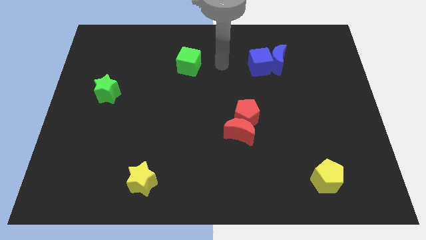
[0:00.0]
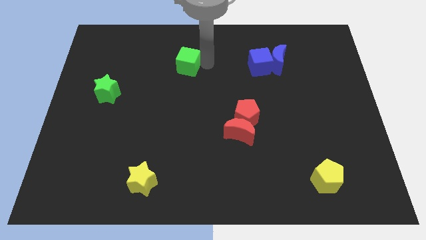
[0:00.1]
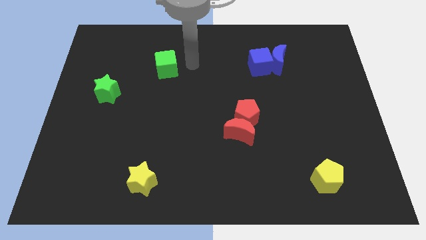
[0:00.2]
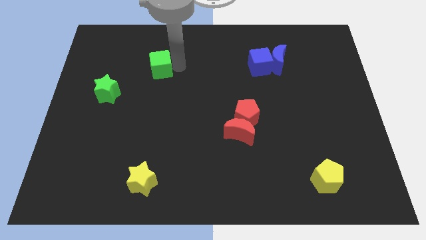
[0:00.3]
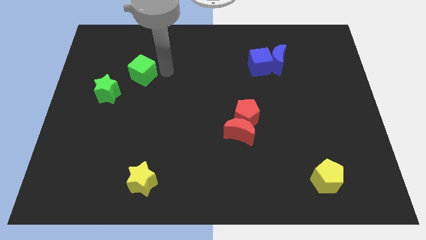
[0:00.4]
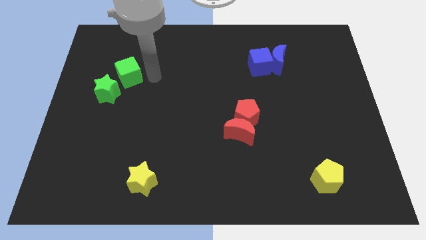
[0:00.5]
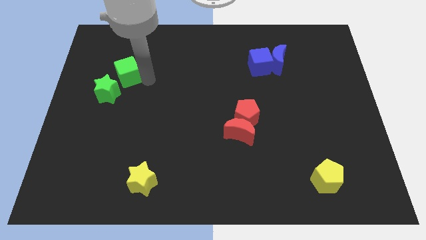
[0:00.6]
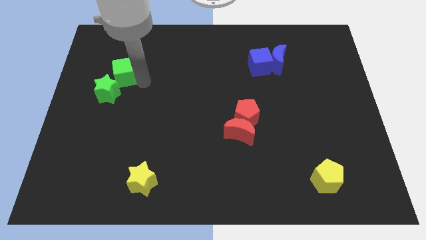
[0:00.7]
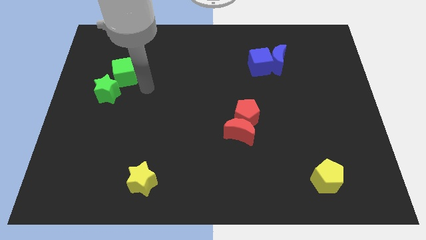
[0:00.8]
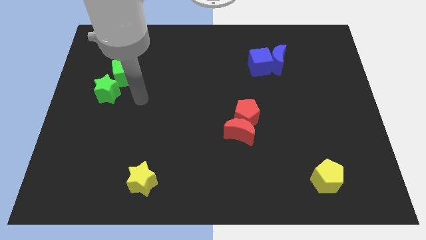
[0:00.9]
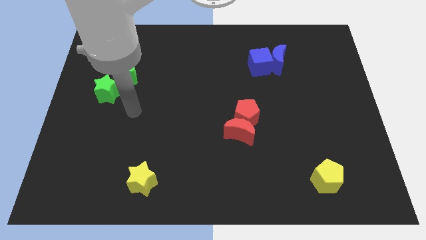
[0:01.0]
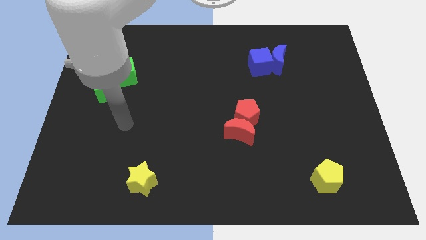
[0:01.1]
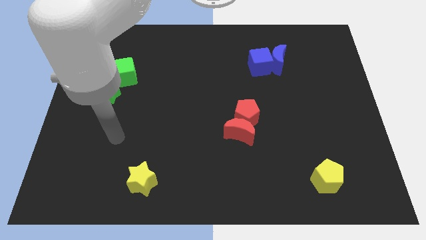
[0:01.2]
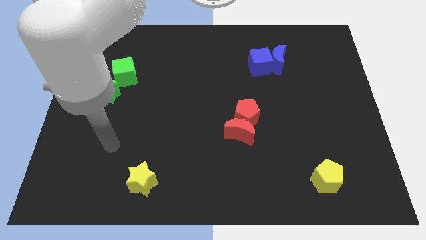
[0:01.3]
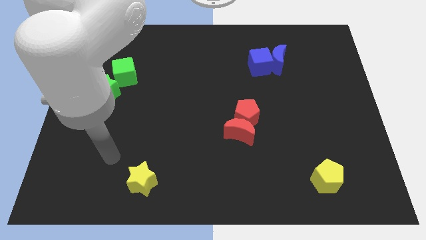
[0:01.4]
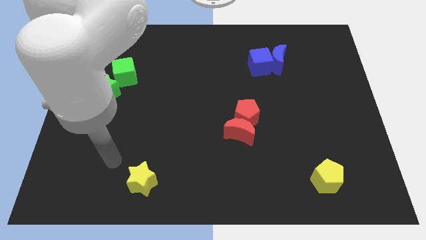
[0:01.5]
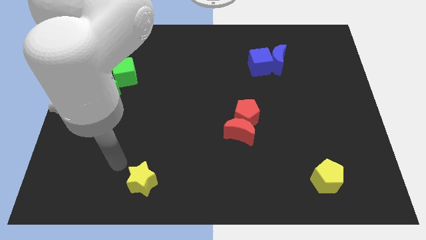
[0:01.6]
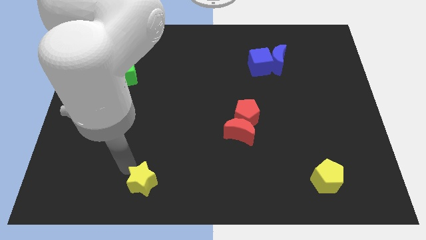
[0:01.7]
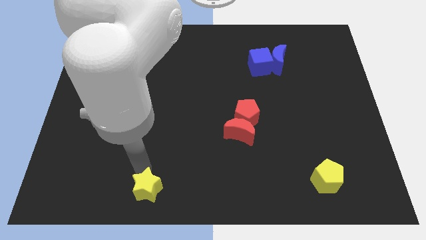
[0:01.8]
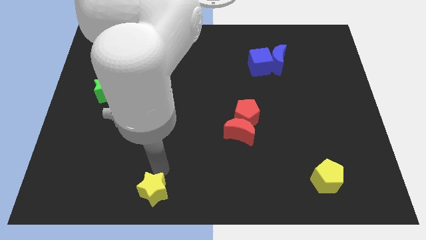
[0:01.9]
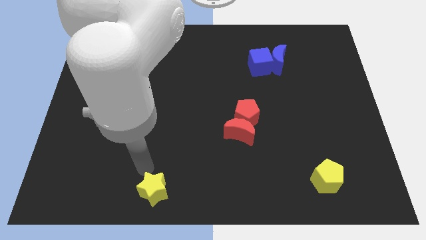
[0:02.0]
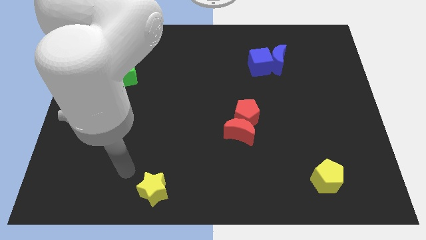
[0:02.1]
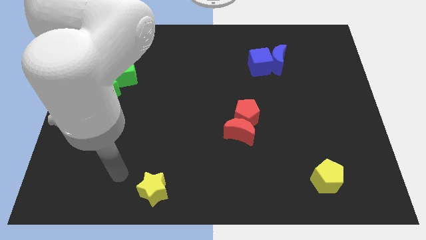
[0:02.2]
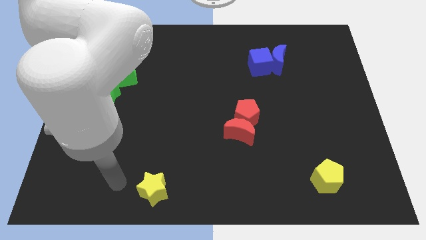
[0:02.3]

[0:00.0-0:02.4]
move the green cube to right of green star

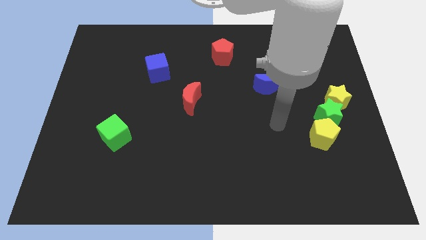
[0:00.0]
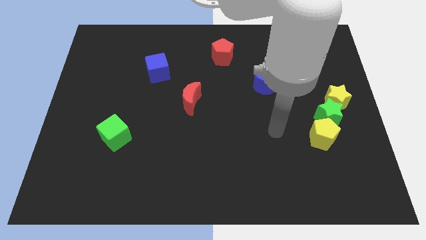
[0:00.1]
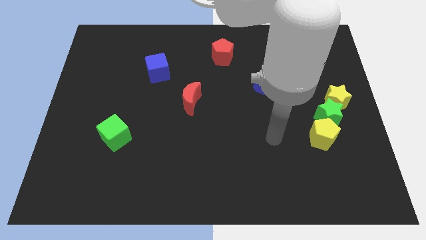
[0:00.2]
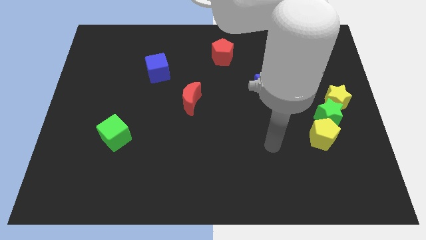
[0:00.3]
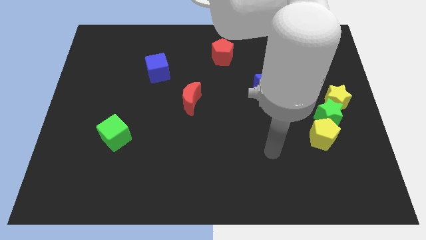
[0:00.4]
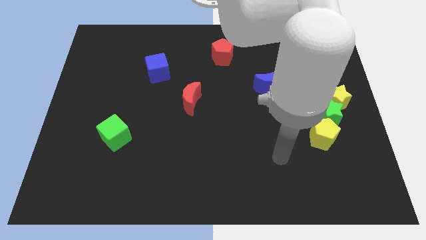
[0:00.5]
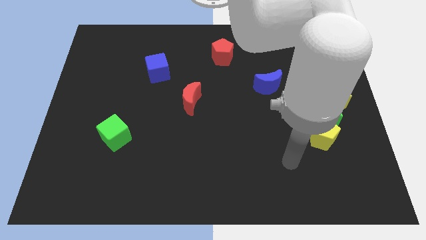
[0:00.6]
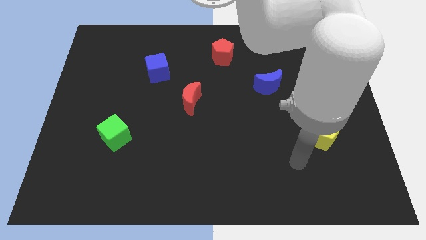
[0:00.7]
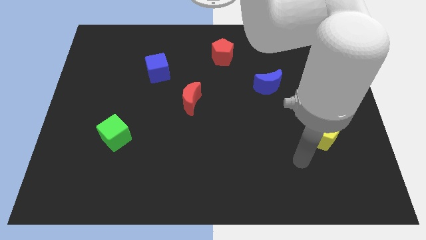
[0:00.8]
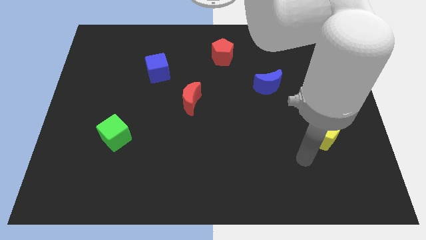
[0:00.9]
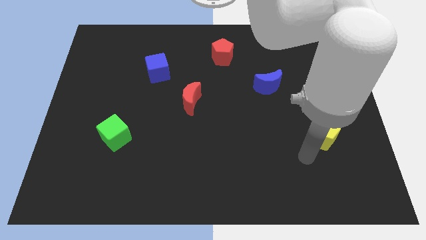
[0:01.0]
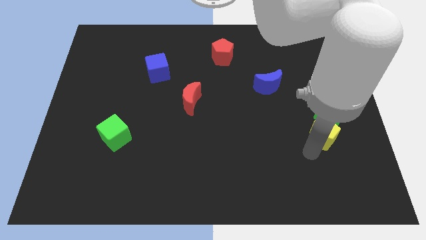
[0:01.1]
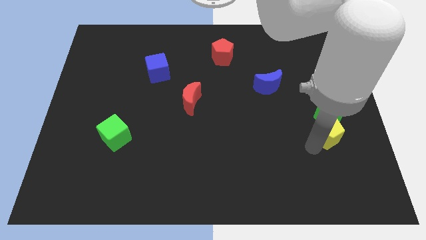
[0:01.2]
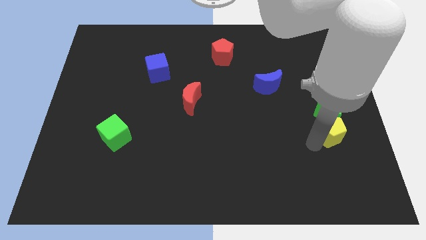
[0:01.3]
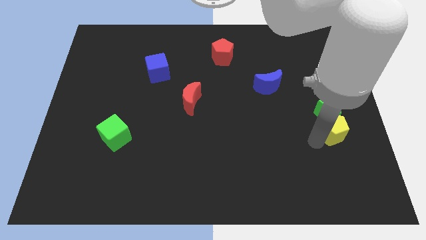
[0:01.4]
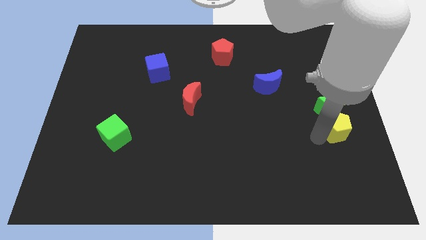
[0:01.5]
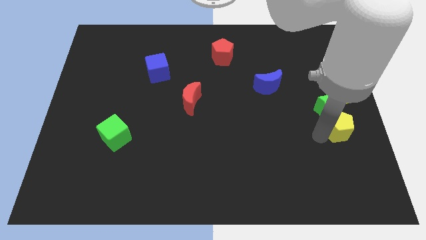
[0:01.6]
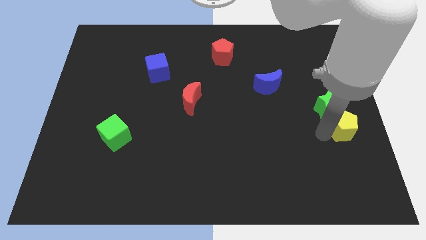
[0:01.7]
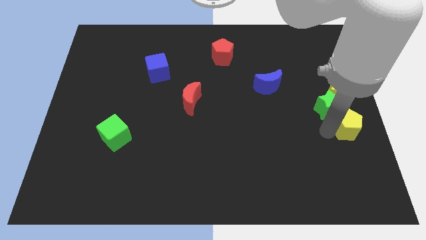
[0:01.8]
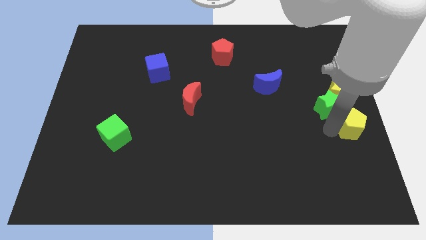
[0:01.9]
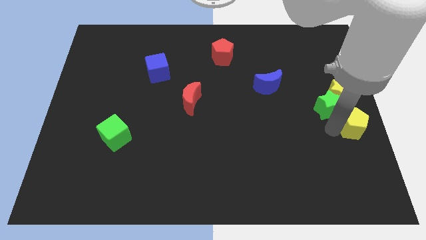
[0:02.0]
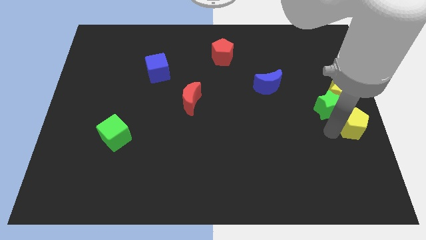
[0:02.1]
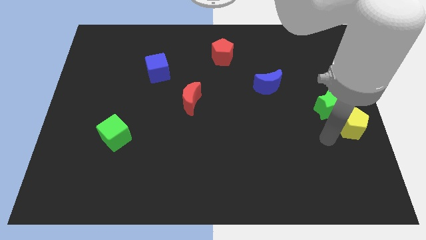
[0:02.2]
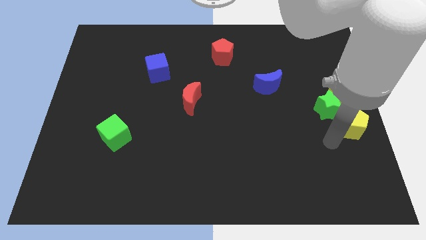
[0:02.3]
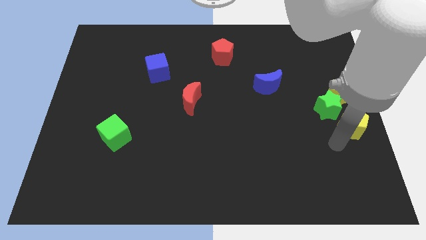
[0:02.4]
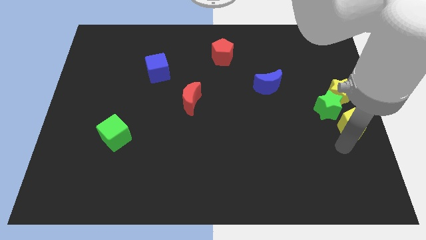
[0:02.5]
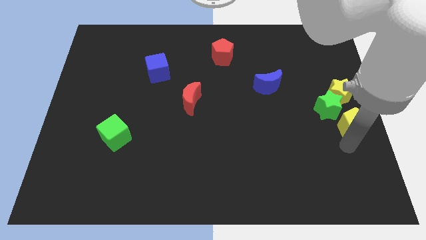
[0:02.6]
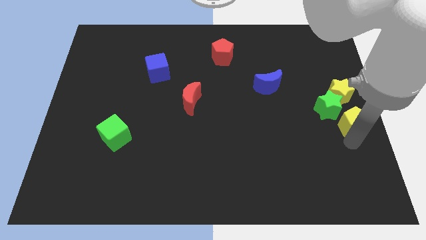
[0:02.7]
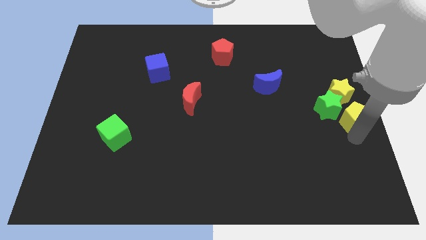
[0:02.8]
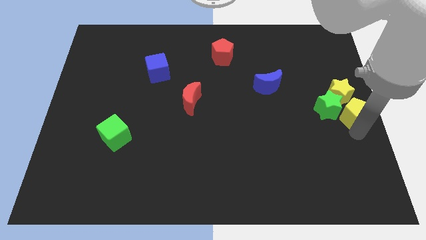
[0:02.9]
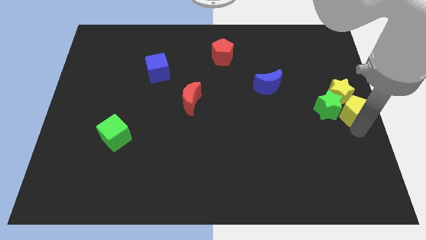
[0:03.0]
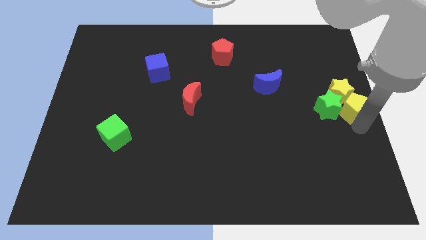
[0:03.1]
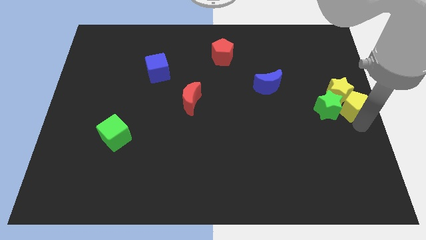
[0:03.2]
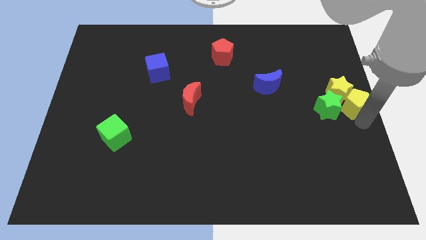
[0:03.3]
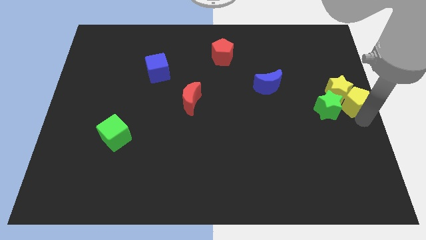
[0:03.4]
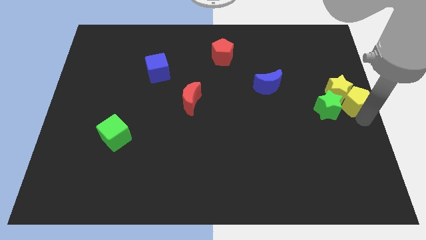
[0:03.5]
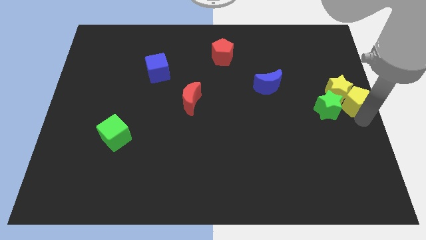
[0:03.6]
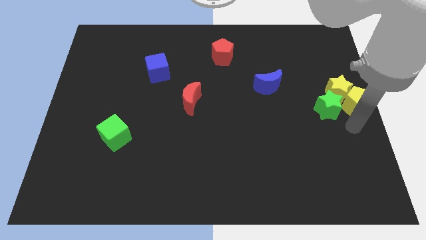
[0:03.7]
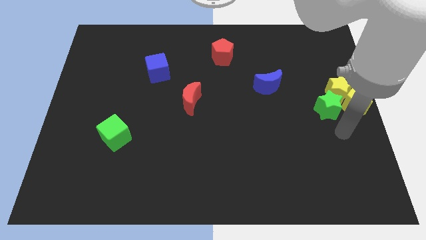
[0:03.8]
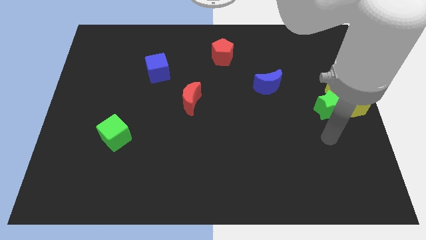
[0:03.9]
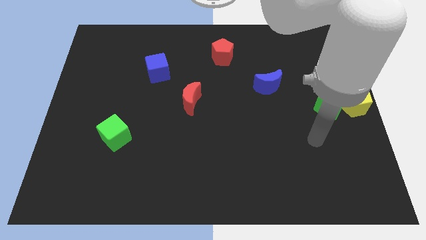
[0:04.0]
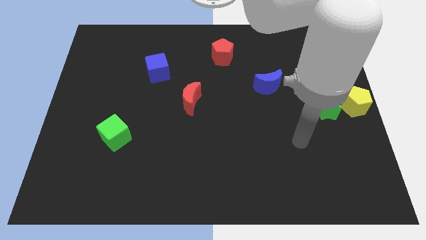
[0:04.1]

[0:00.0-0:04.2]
push the yellow pentagon into yellow star diagonally

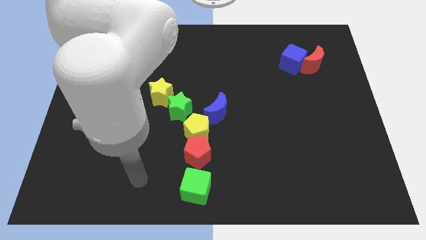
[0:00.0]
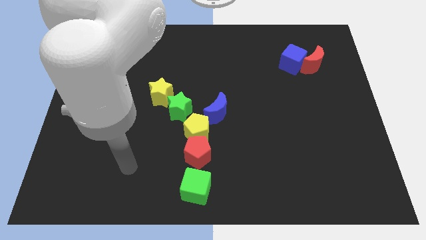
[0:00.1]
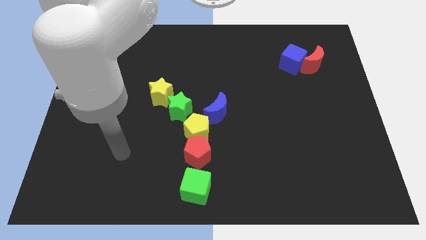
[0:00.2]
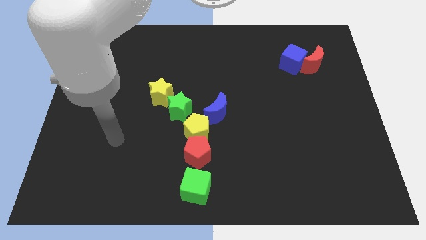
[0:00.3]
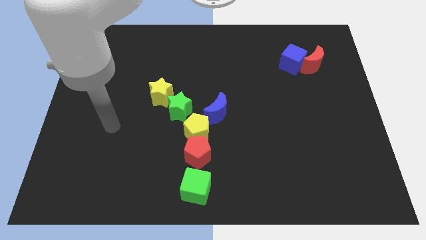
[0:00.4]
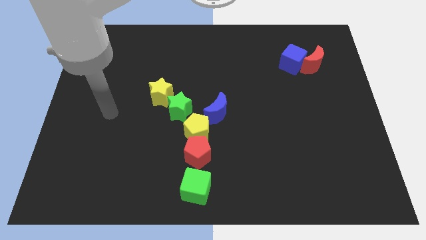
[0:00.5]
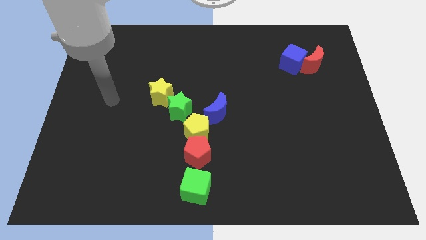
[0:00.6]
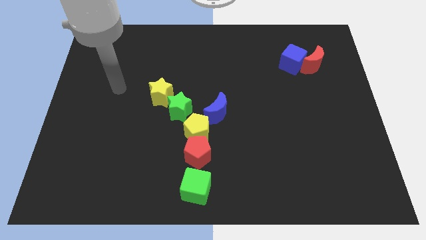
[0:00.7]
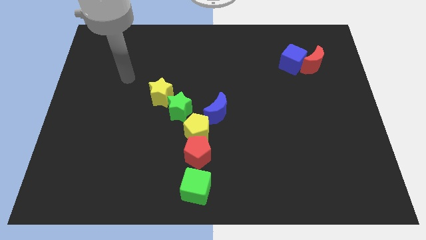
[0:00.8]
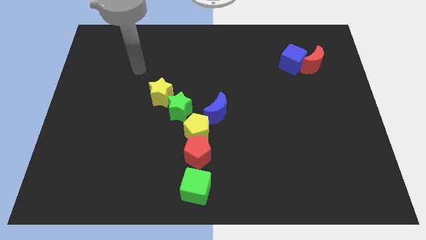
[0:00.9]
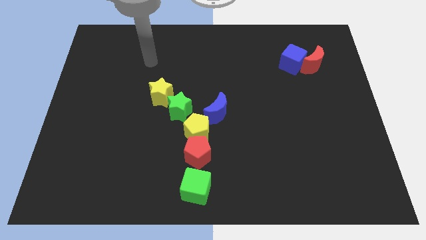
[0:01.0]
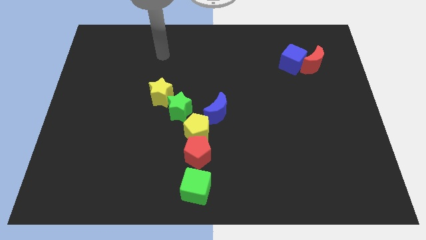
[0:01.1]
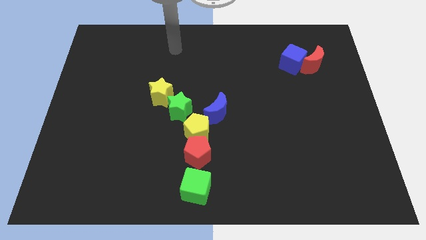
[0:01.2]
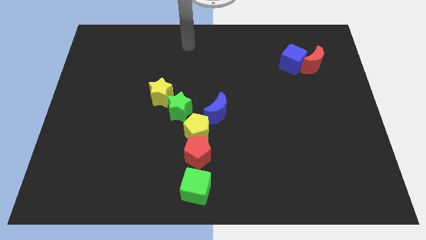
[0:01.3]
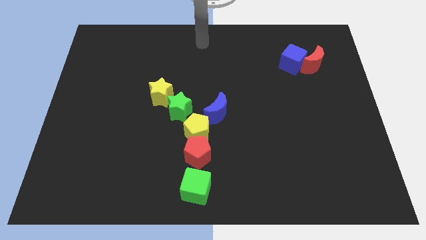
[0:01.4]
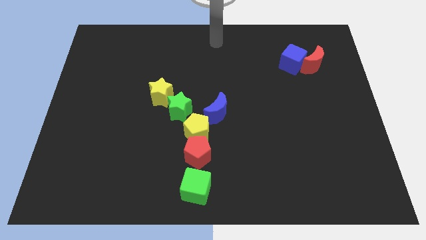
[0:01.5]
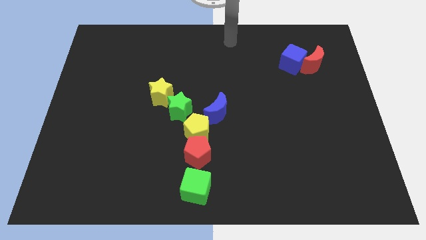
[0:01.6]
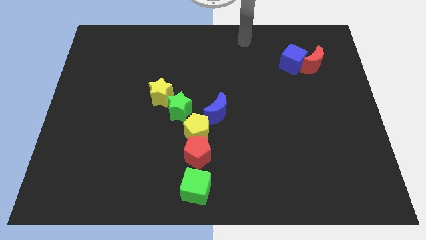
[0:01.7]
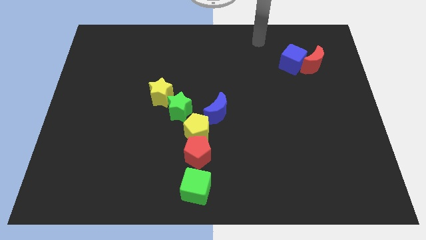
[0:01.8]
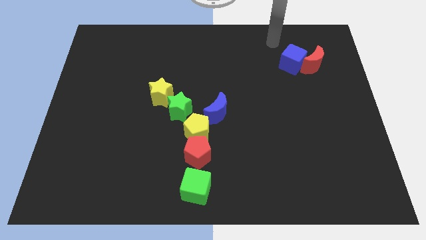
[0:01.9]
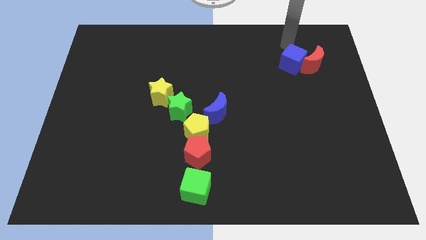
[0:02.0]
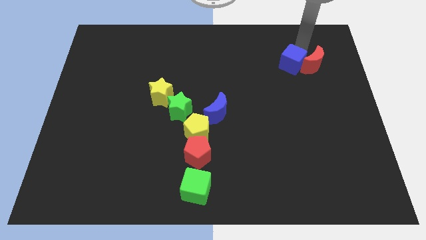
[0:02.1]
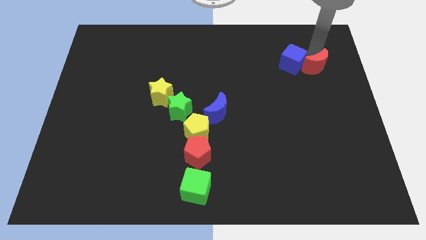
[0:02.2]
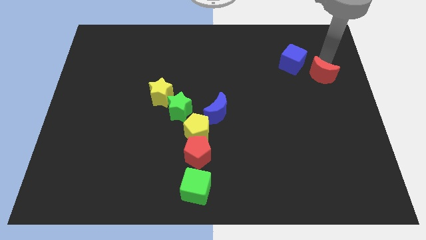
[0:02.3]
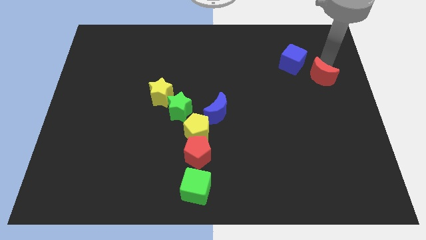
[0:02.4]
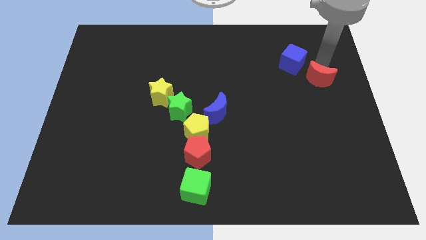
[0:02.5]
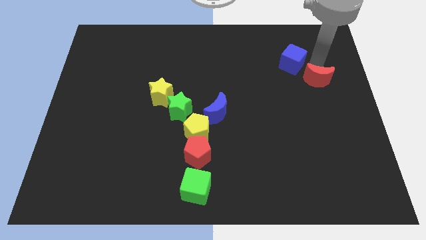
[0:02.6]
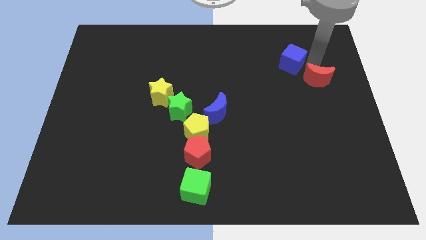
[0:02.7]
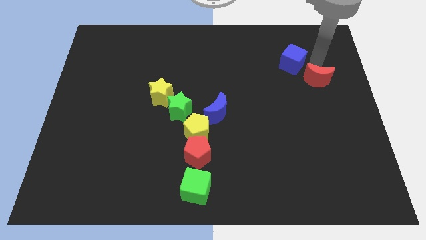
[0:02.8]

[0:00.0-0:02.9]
move the arm near the red moon
